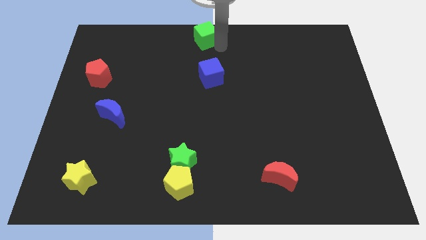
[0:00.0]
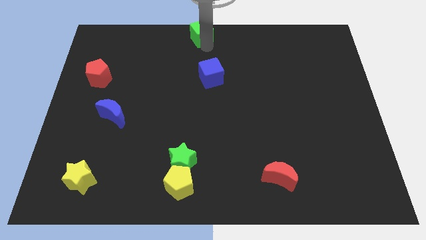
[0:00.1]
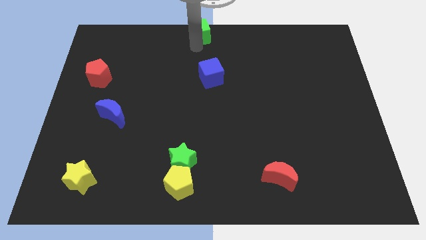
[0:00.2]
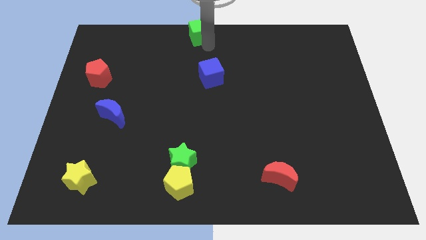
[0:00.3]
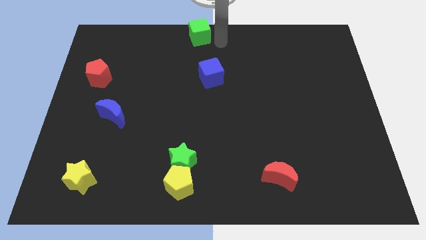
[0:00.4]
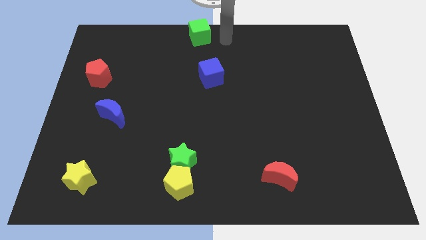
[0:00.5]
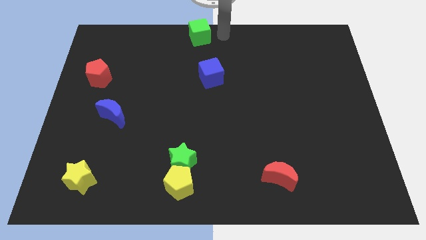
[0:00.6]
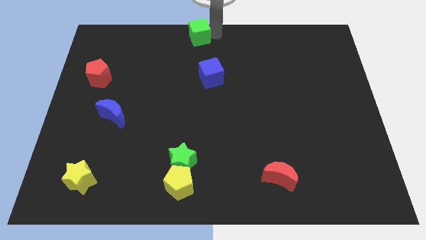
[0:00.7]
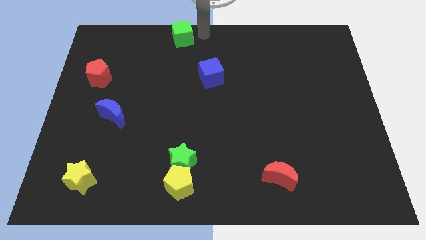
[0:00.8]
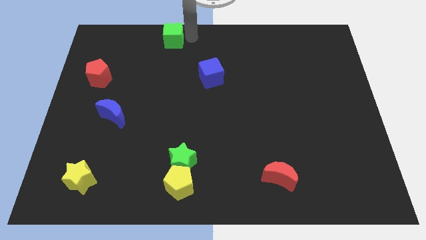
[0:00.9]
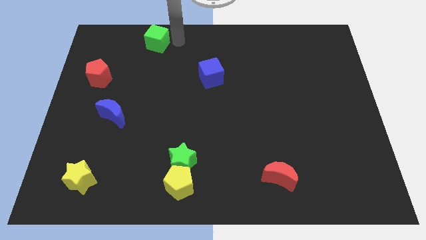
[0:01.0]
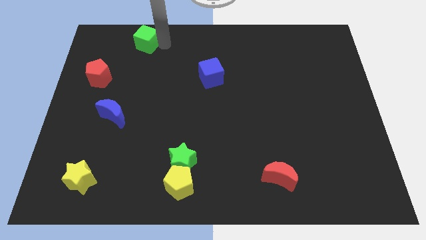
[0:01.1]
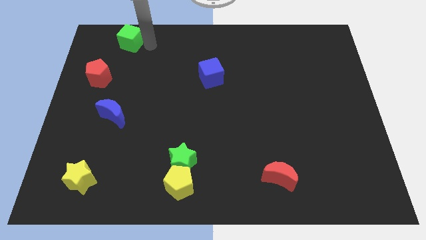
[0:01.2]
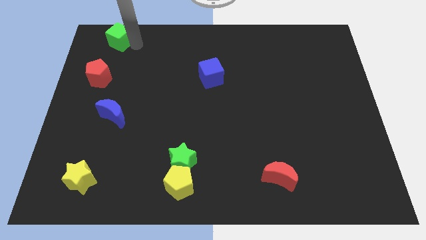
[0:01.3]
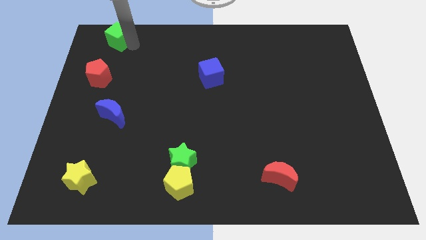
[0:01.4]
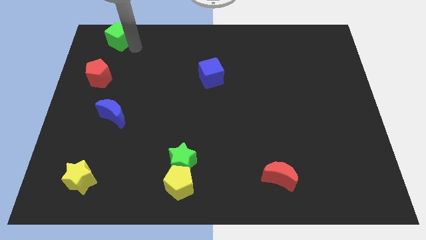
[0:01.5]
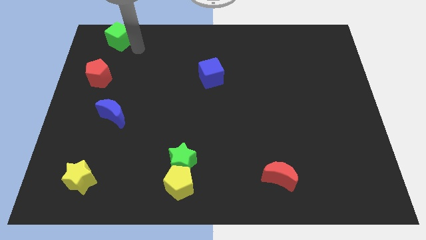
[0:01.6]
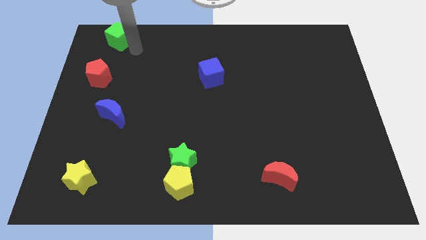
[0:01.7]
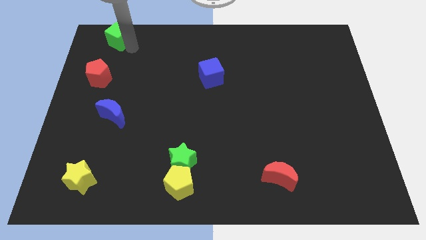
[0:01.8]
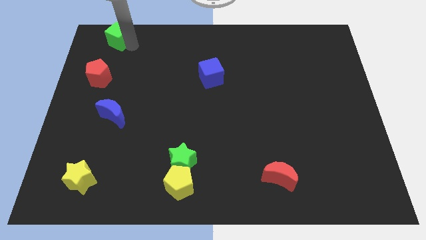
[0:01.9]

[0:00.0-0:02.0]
move the green cube to the top of the red pentagon

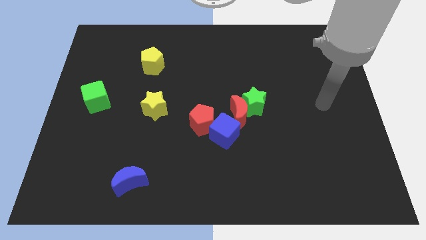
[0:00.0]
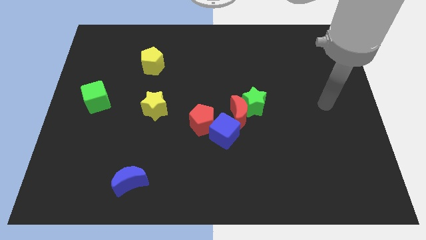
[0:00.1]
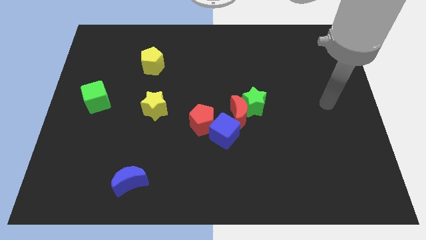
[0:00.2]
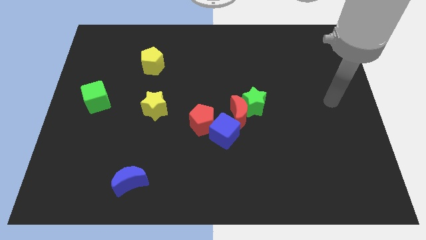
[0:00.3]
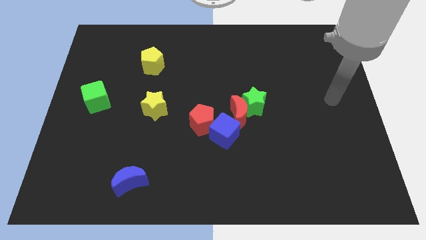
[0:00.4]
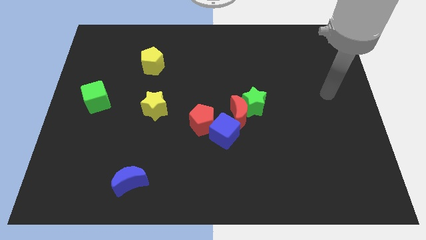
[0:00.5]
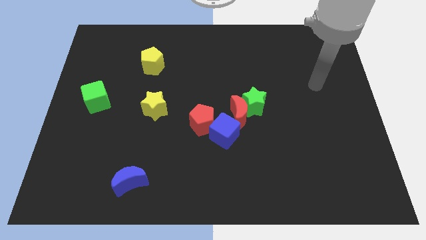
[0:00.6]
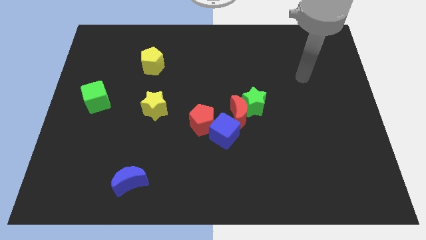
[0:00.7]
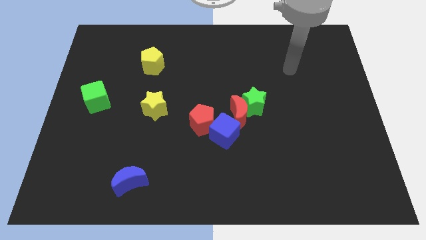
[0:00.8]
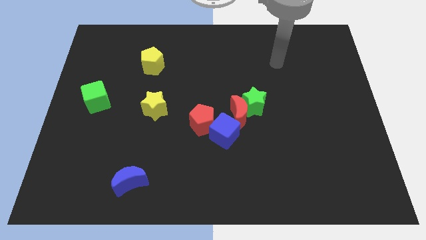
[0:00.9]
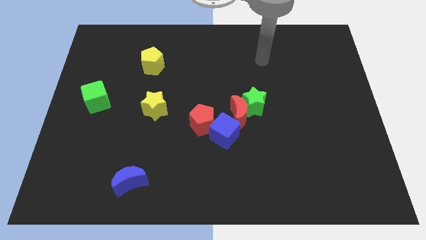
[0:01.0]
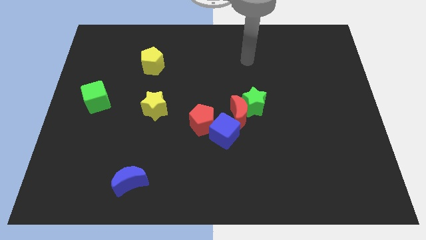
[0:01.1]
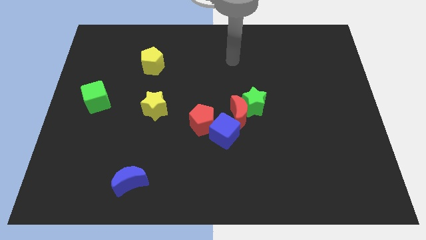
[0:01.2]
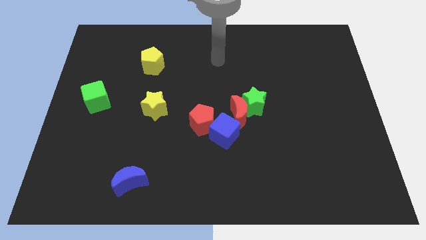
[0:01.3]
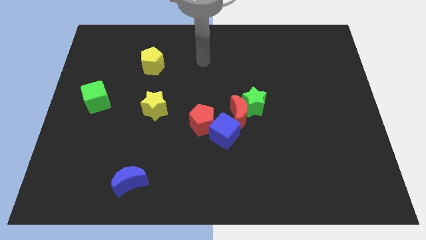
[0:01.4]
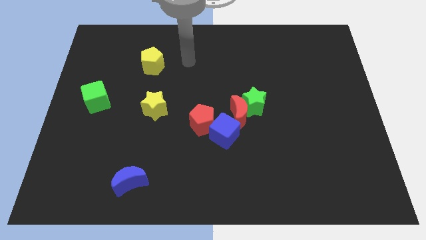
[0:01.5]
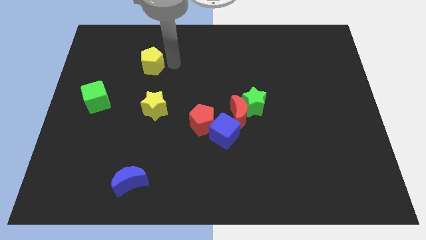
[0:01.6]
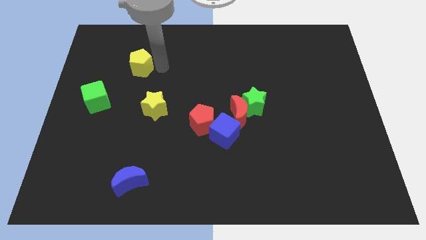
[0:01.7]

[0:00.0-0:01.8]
move your arm to the right of the yellow pentagon

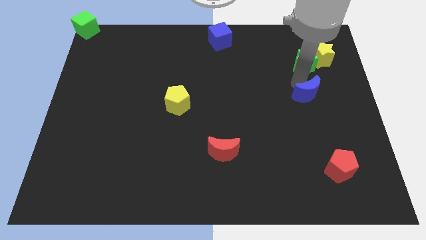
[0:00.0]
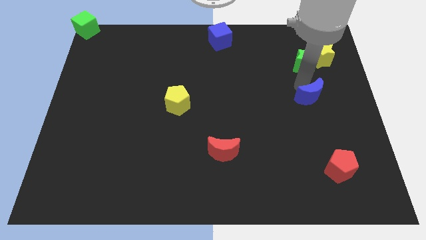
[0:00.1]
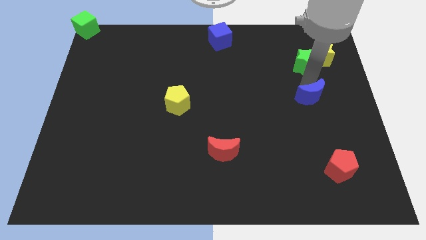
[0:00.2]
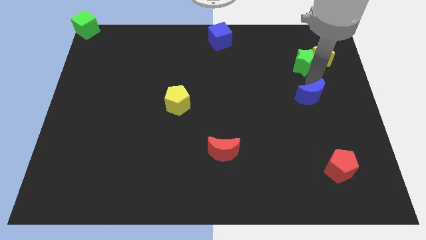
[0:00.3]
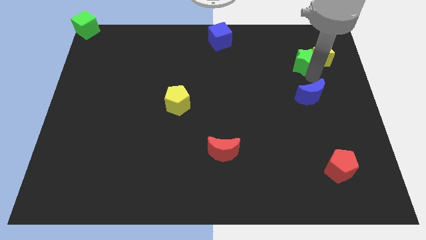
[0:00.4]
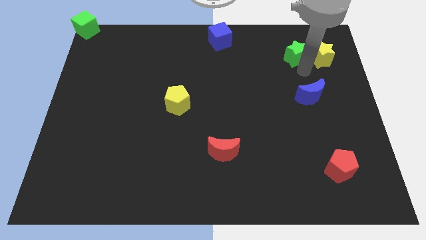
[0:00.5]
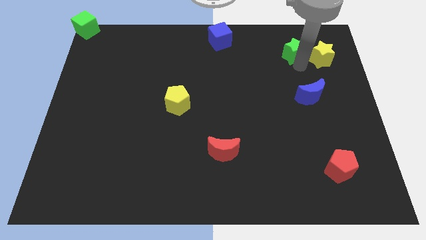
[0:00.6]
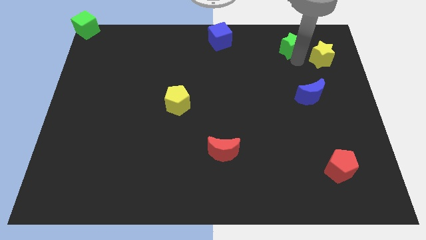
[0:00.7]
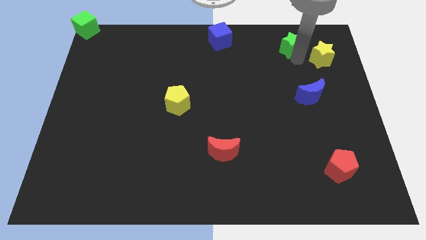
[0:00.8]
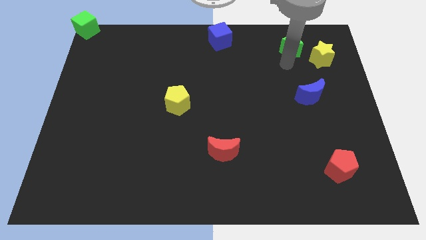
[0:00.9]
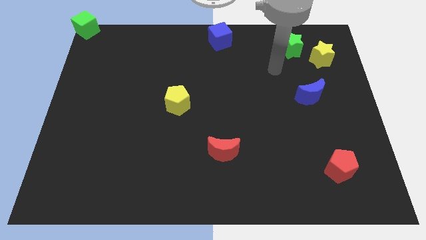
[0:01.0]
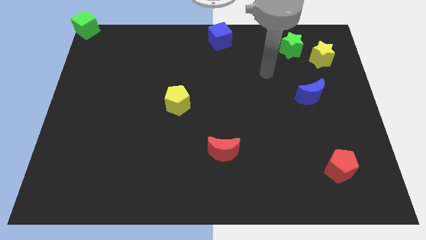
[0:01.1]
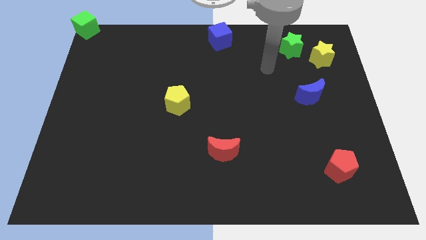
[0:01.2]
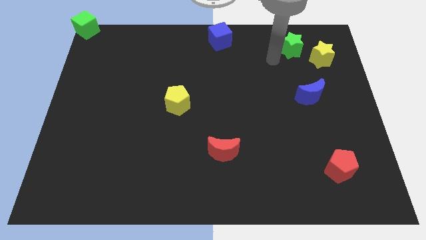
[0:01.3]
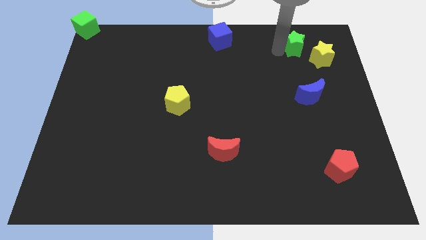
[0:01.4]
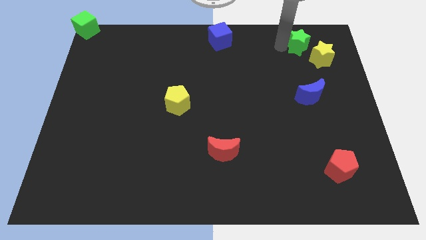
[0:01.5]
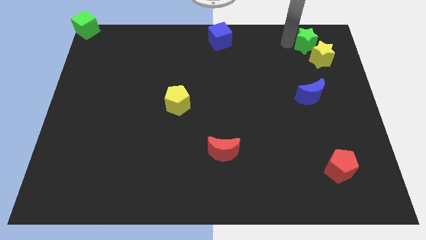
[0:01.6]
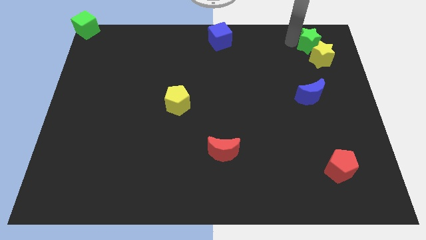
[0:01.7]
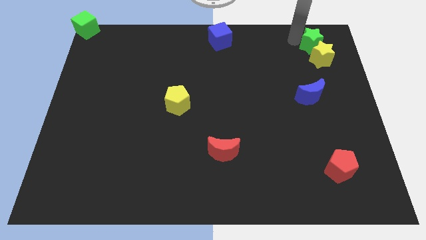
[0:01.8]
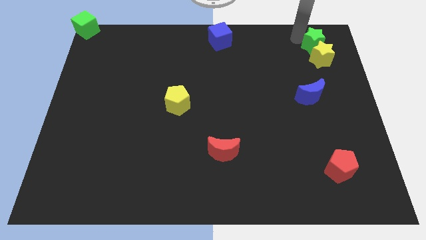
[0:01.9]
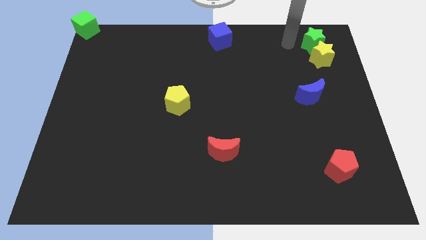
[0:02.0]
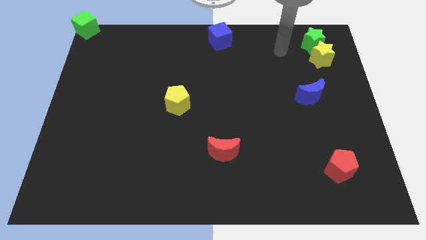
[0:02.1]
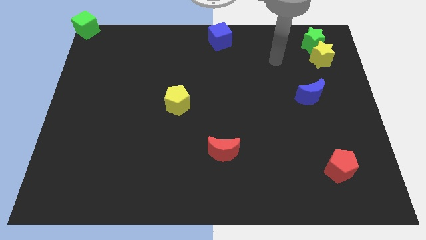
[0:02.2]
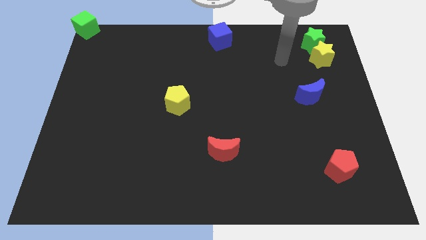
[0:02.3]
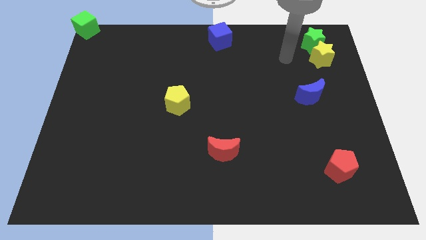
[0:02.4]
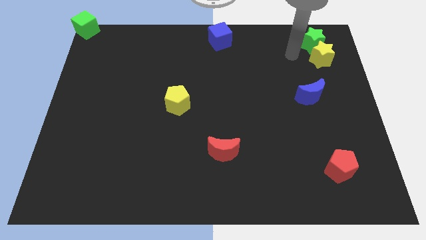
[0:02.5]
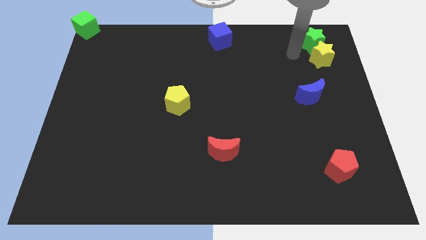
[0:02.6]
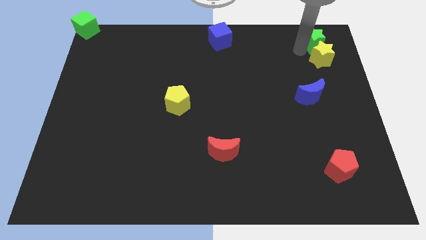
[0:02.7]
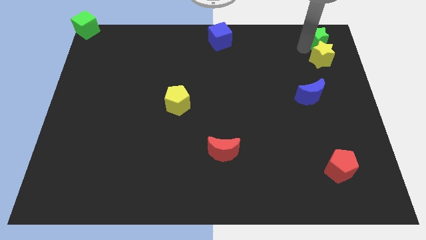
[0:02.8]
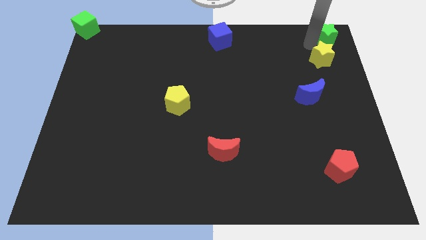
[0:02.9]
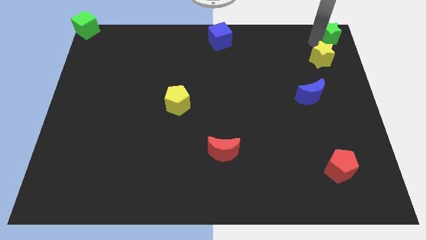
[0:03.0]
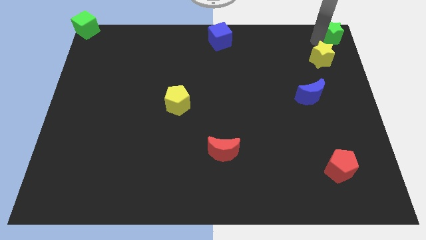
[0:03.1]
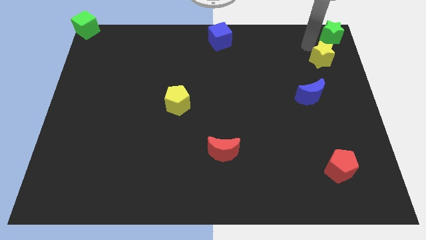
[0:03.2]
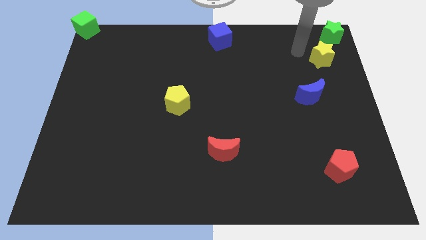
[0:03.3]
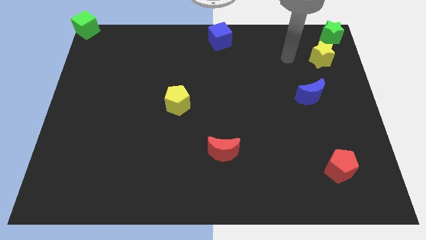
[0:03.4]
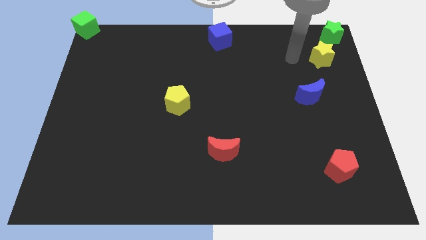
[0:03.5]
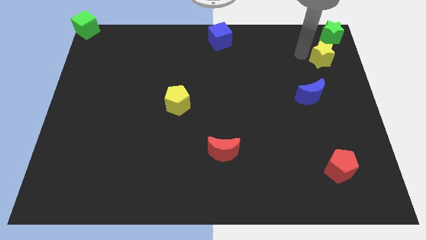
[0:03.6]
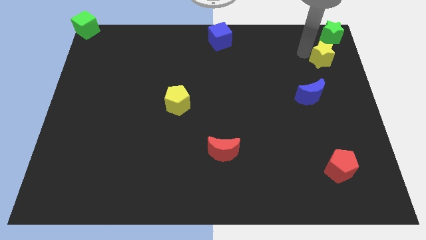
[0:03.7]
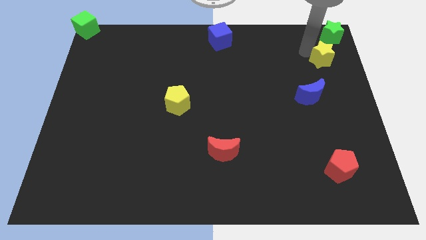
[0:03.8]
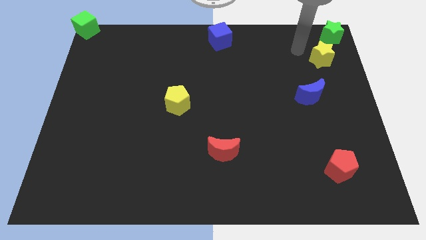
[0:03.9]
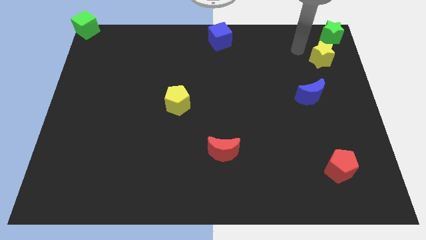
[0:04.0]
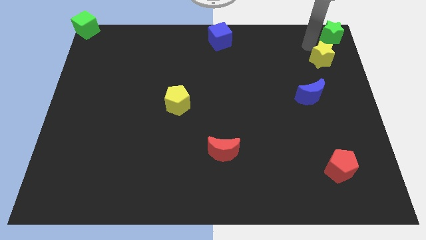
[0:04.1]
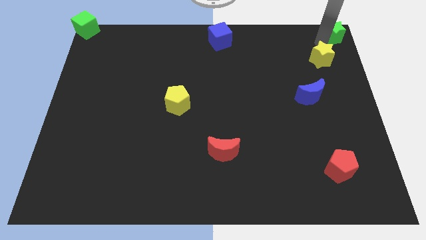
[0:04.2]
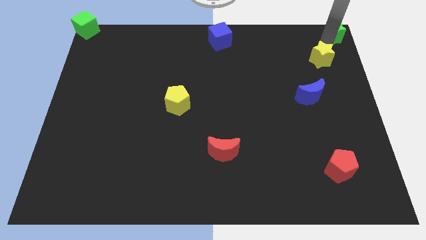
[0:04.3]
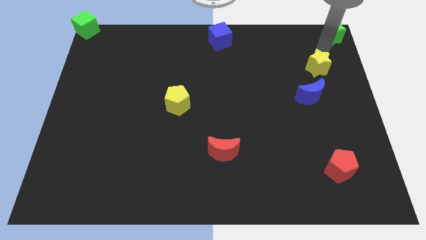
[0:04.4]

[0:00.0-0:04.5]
move the green star to the top right

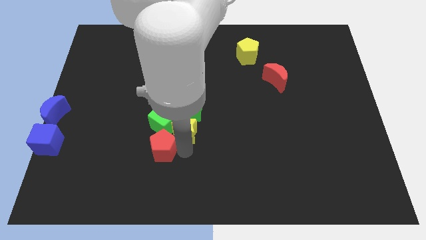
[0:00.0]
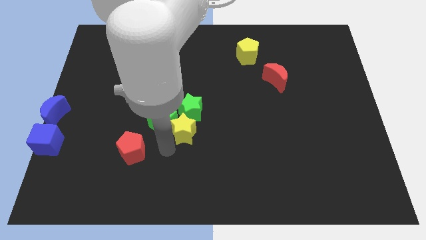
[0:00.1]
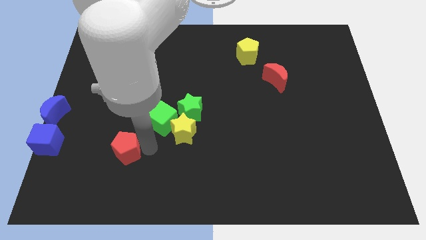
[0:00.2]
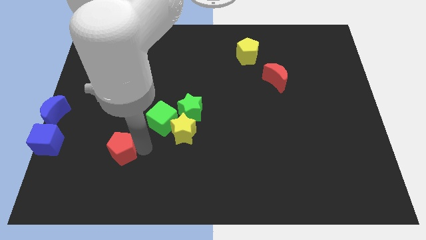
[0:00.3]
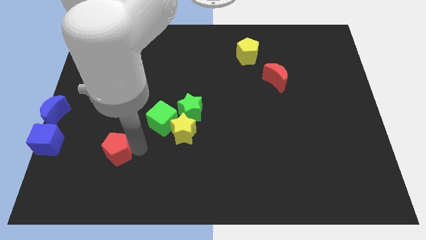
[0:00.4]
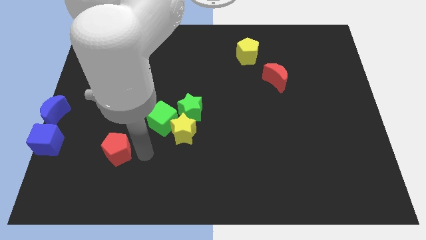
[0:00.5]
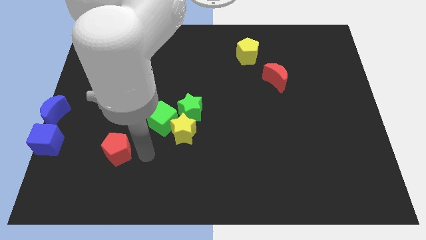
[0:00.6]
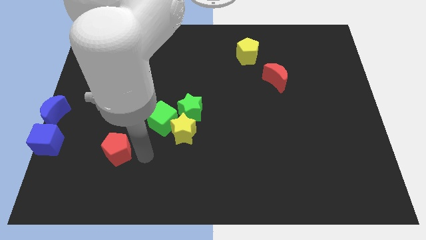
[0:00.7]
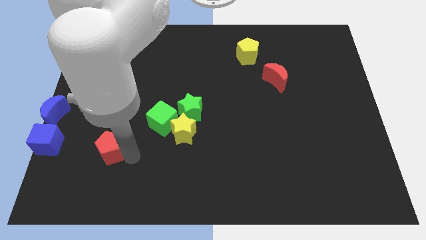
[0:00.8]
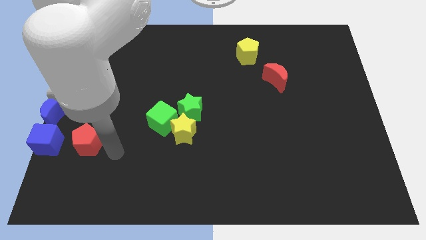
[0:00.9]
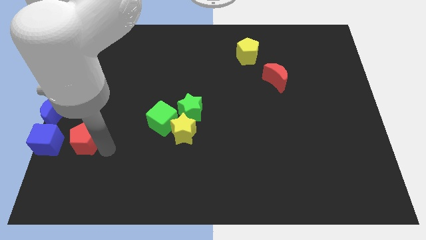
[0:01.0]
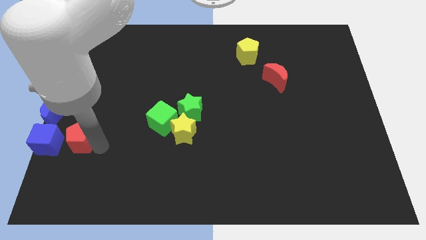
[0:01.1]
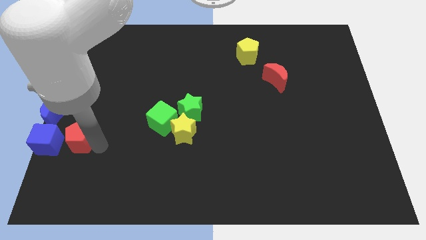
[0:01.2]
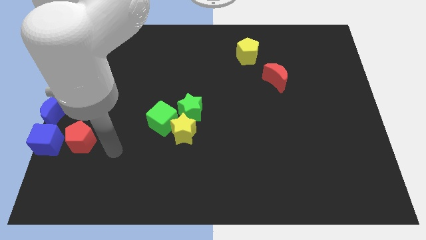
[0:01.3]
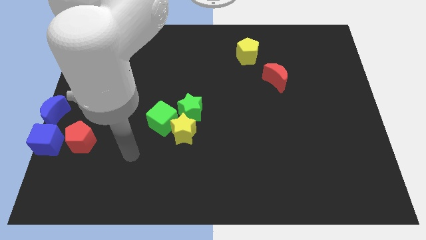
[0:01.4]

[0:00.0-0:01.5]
move the red pentagon to the right side of blue cube
